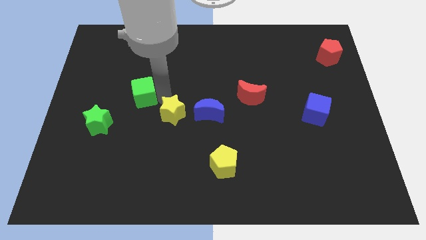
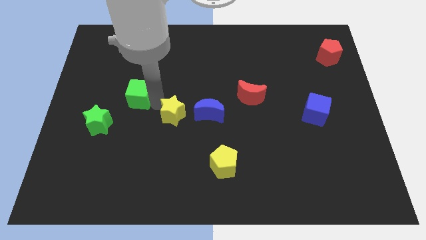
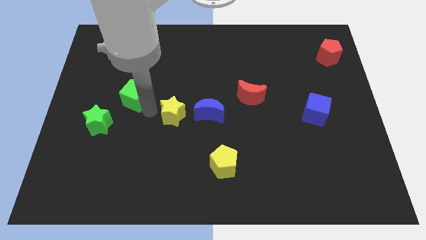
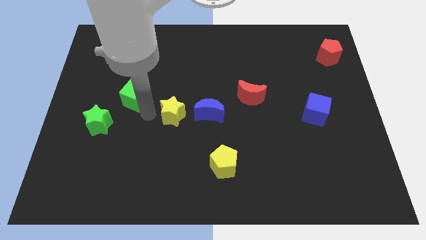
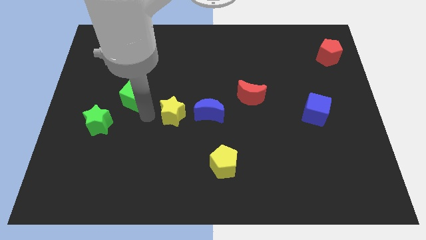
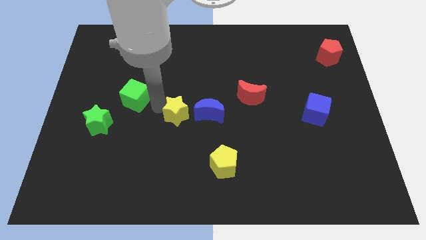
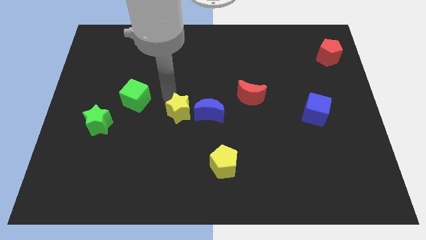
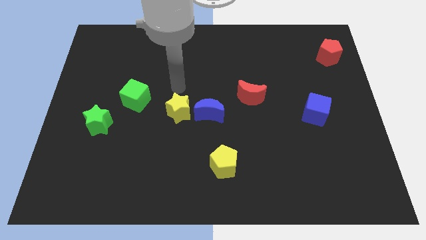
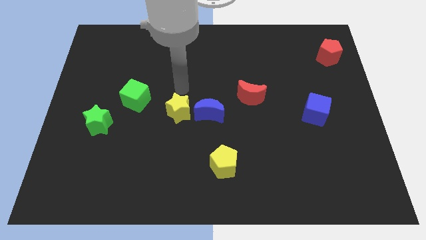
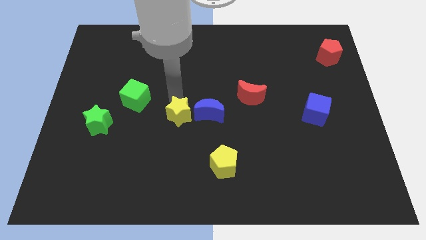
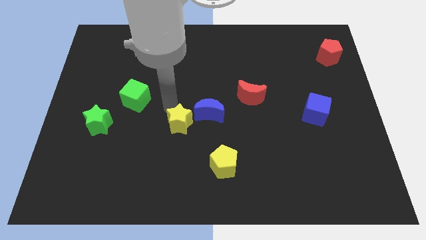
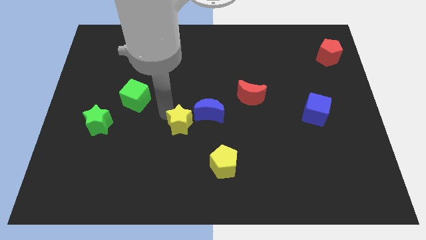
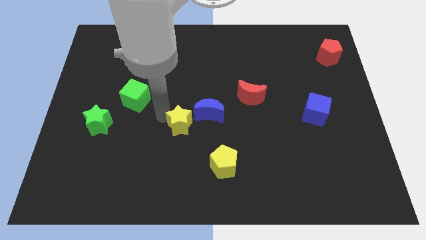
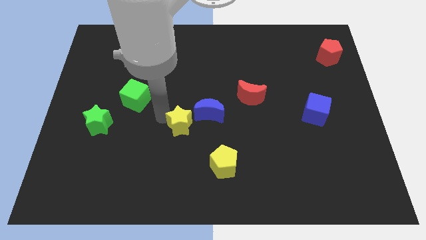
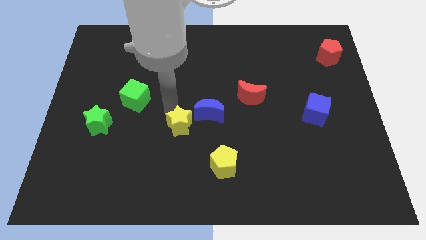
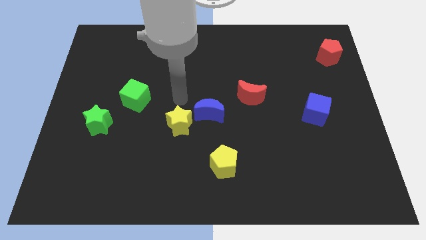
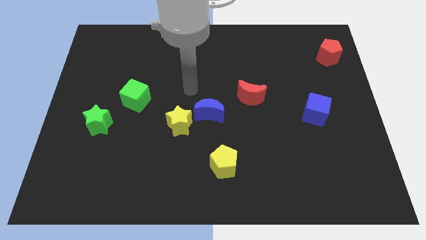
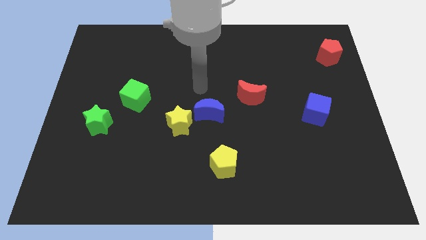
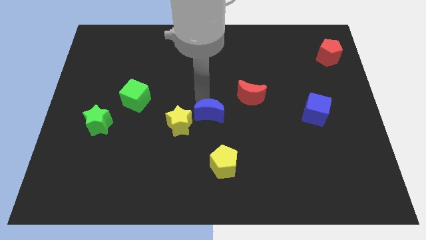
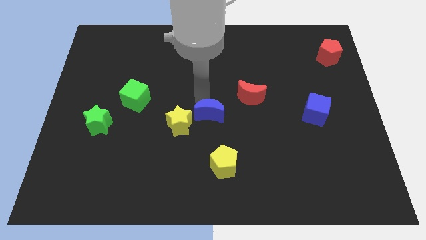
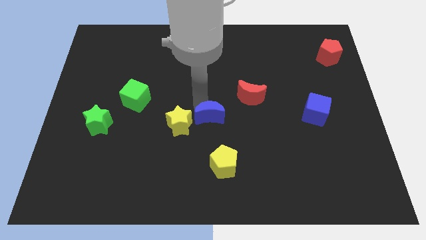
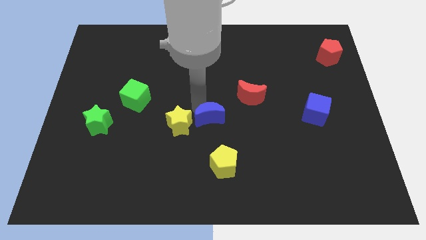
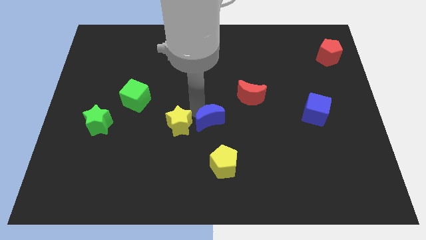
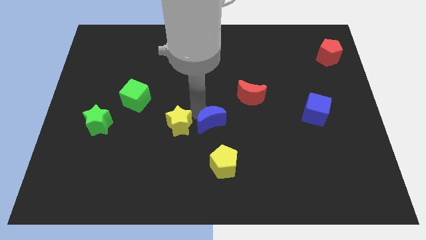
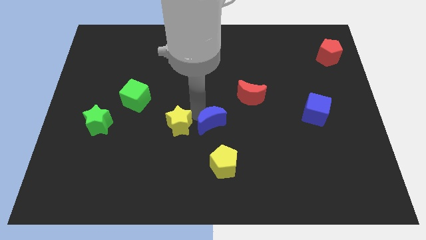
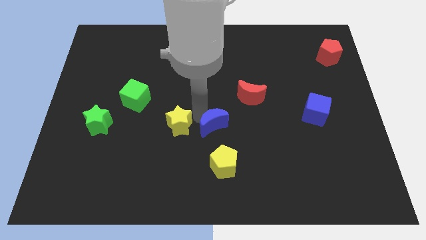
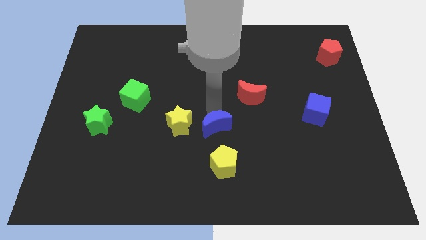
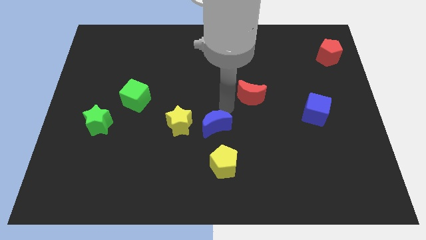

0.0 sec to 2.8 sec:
push the yellow star and blue crescent slightly to the bottom

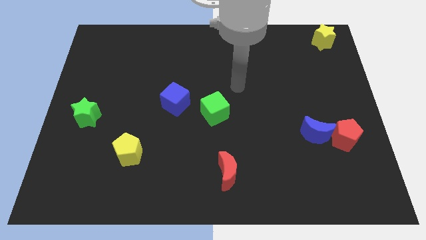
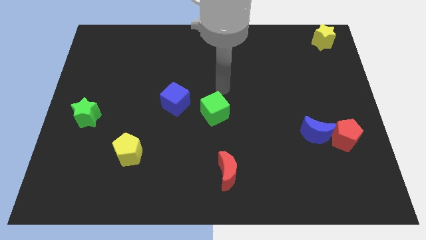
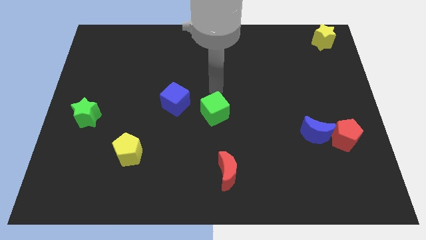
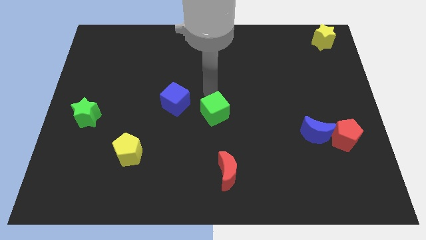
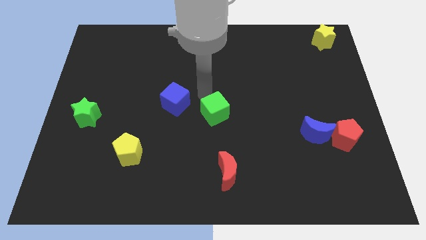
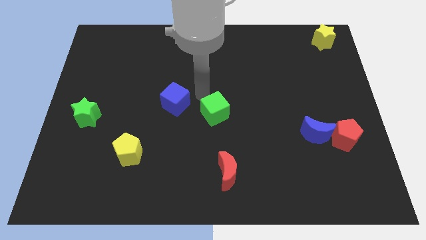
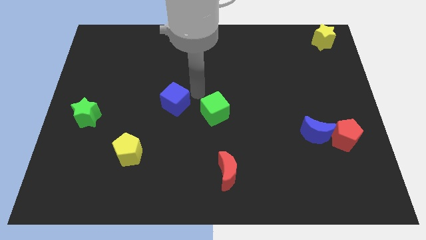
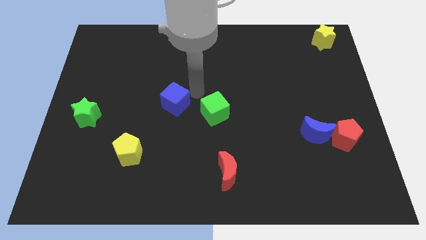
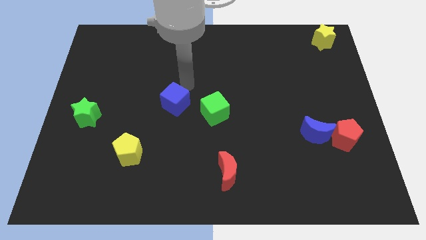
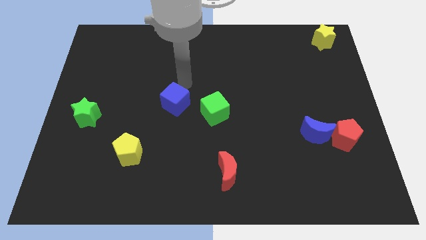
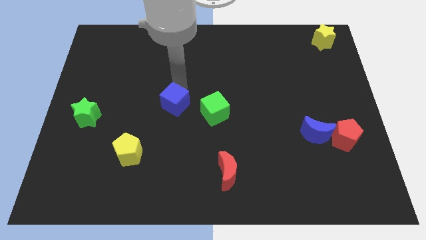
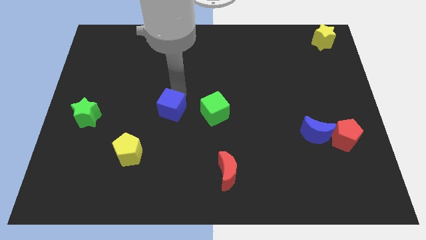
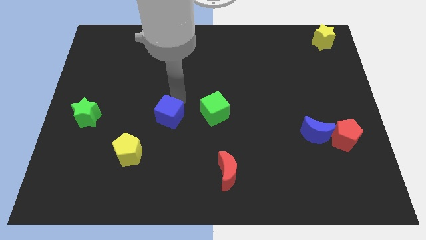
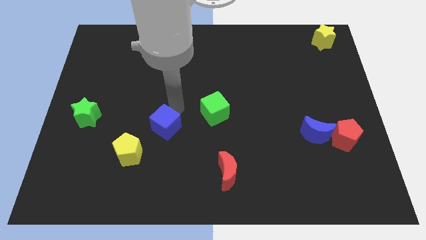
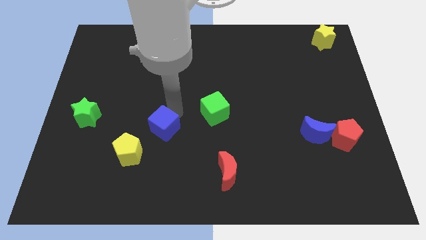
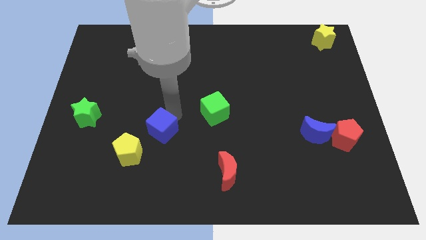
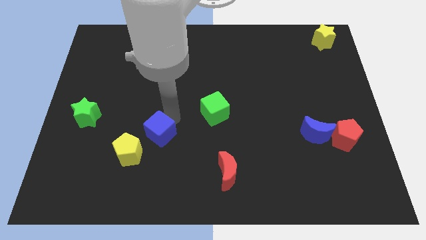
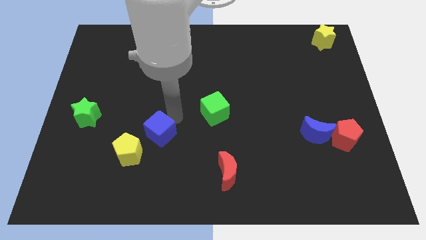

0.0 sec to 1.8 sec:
slide the blue cube diagonally bottom left to the green cube

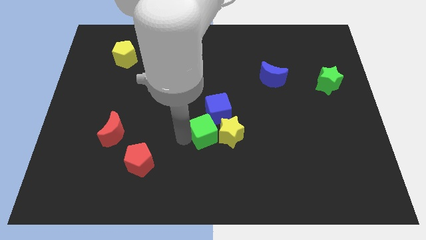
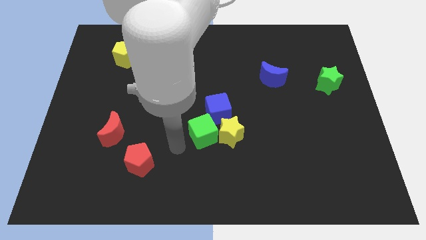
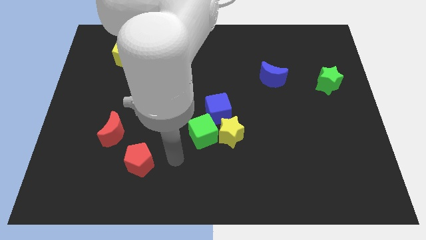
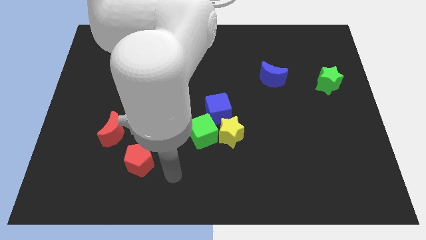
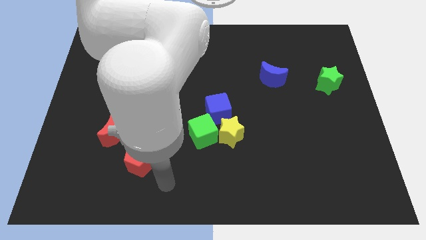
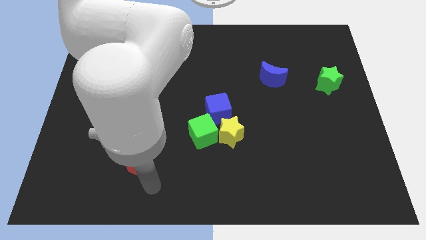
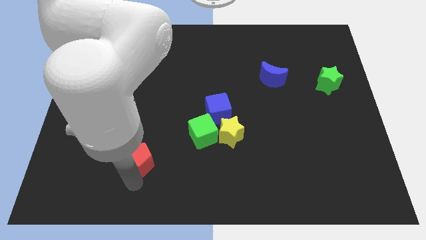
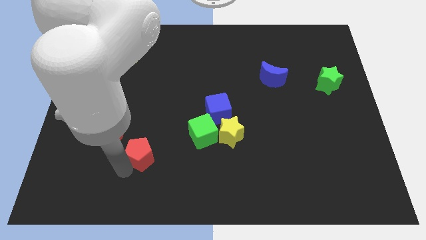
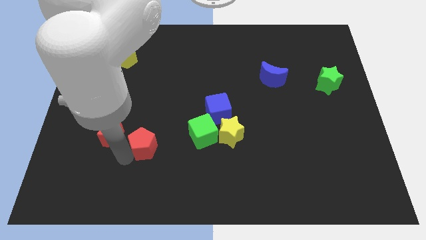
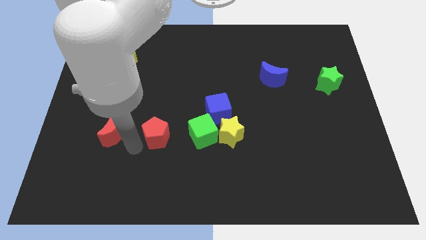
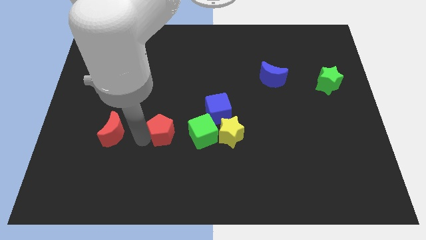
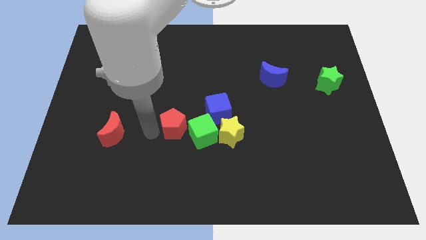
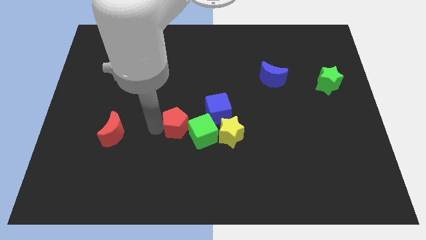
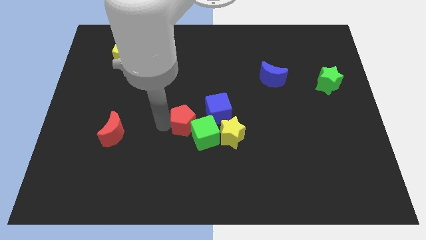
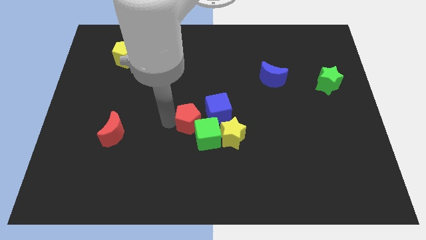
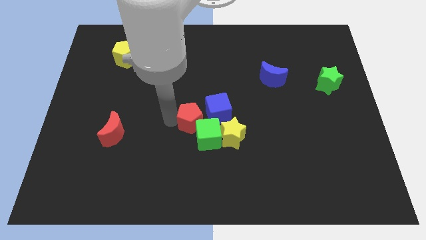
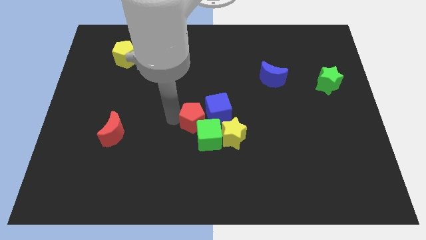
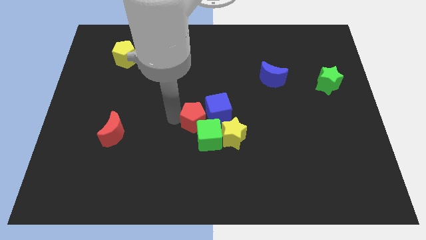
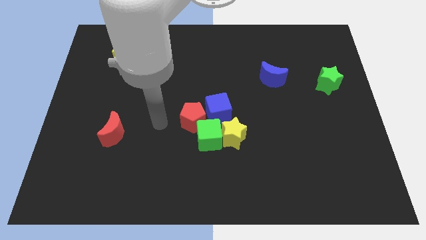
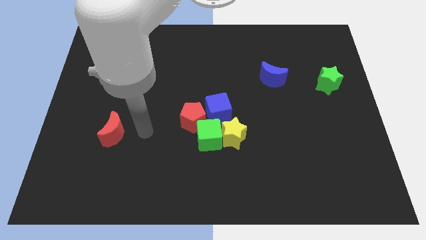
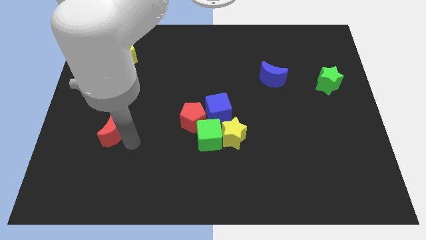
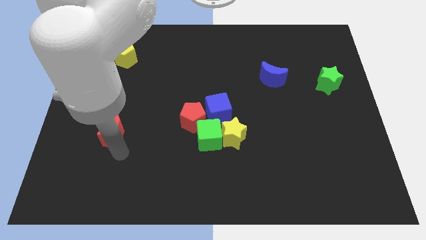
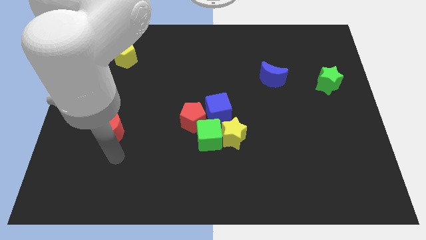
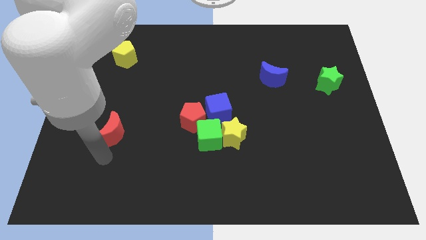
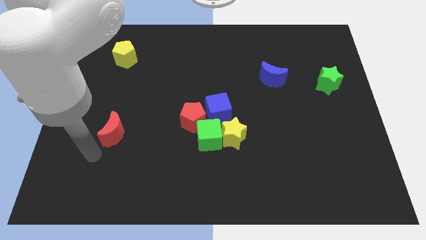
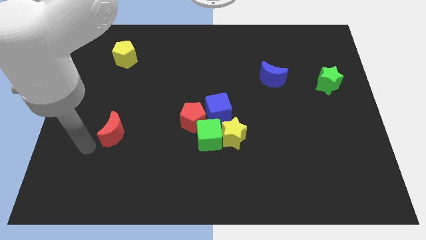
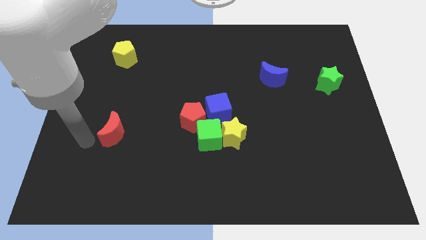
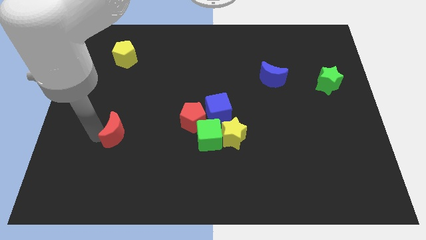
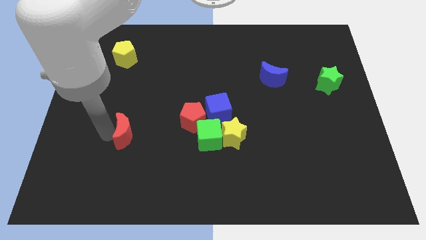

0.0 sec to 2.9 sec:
move the red pentagon left to the blue cube

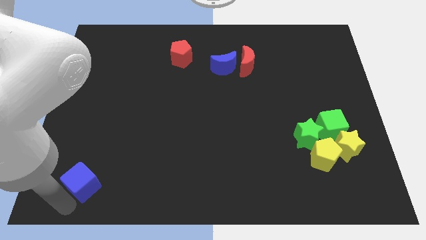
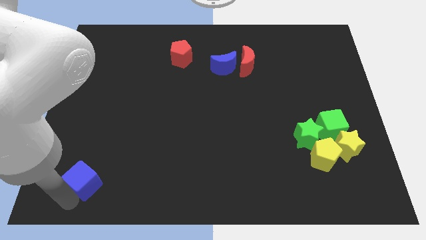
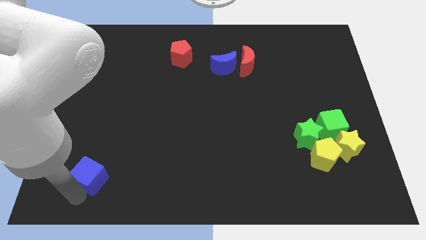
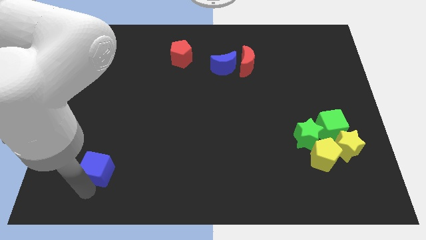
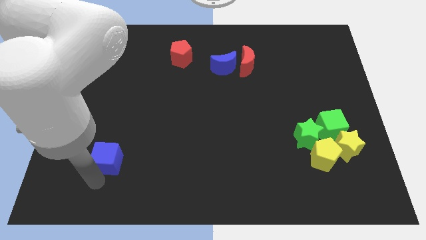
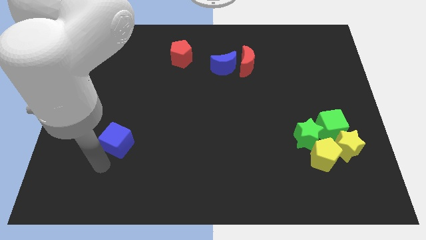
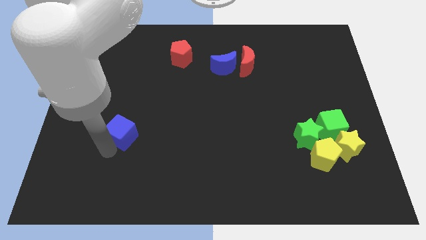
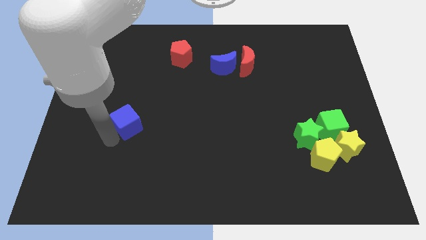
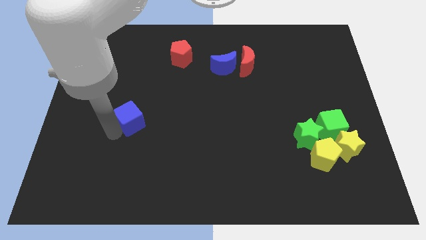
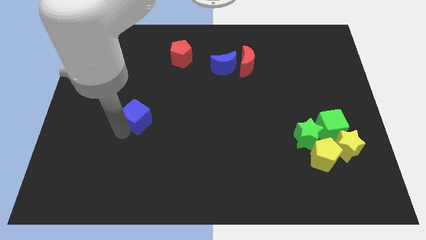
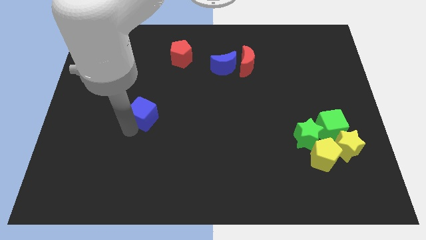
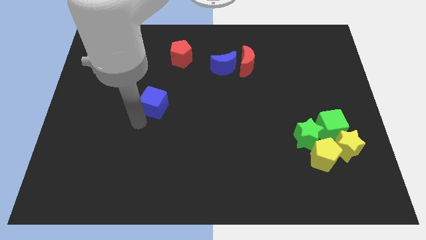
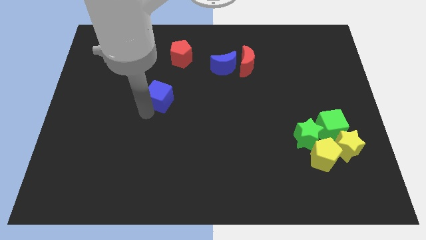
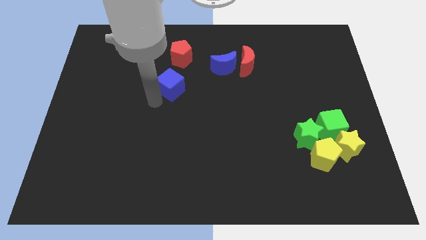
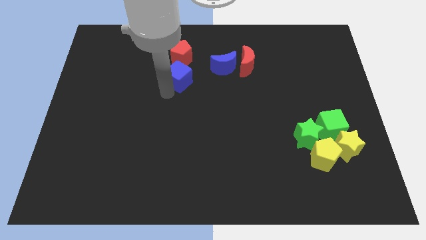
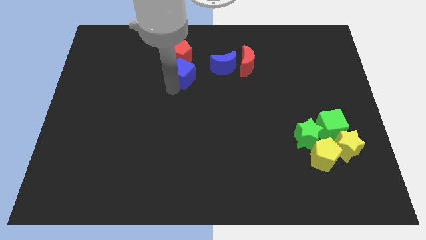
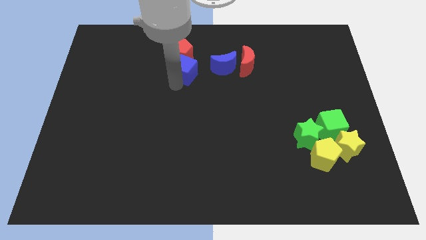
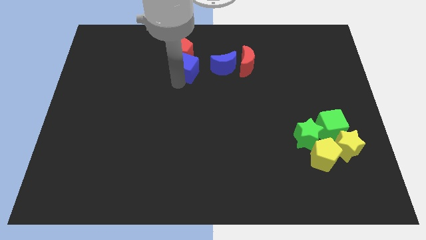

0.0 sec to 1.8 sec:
take the blue cube into the bottom side of the red pentagon
